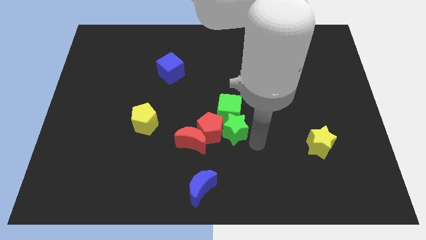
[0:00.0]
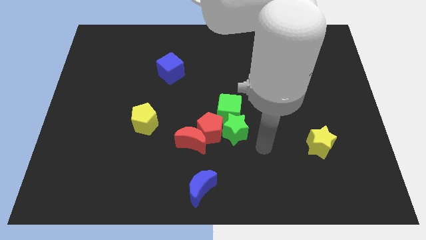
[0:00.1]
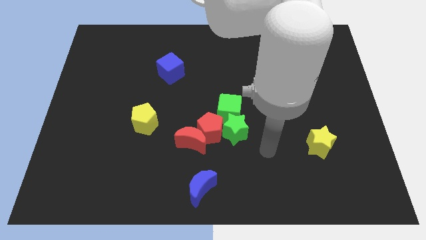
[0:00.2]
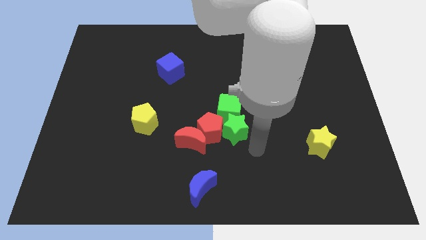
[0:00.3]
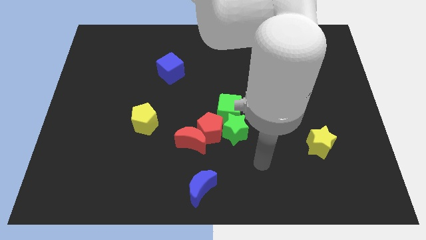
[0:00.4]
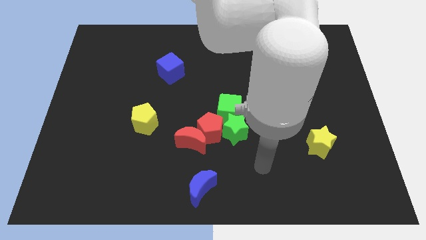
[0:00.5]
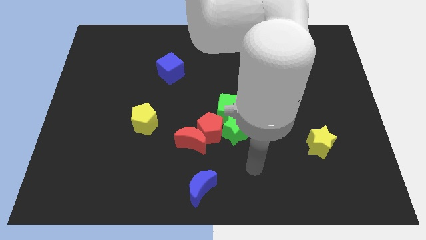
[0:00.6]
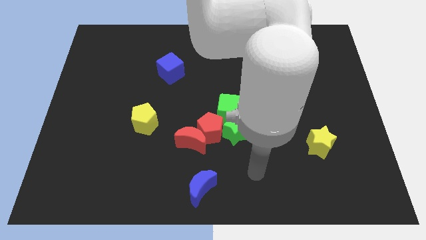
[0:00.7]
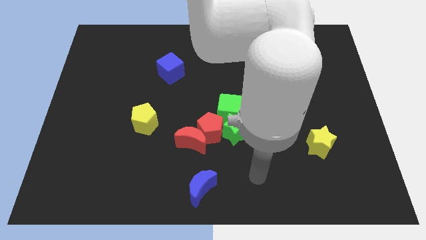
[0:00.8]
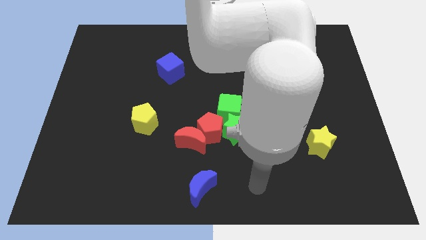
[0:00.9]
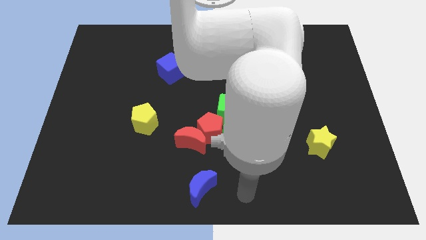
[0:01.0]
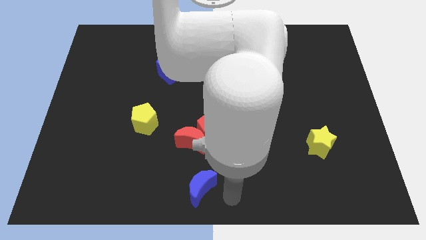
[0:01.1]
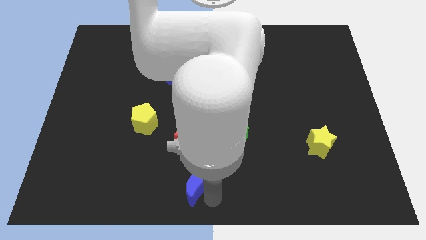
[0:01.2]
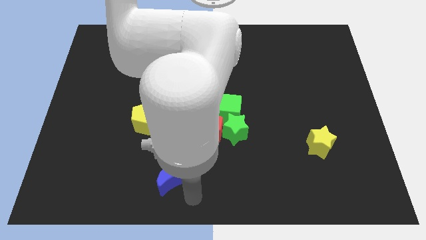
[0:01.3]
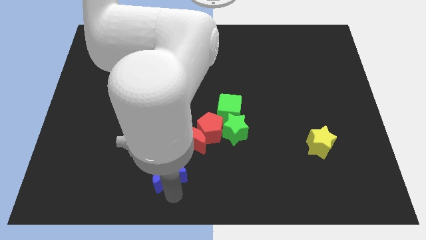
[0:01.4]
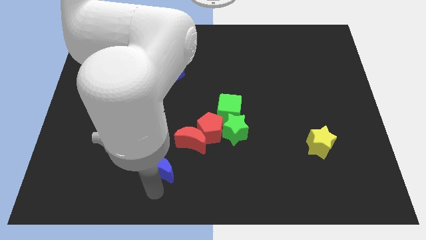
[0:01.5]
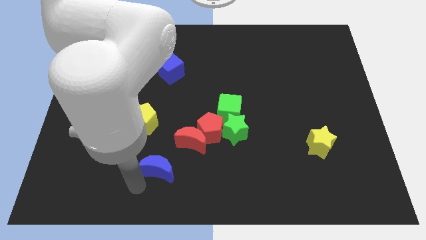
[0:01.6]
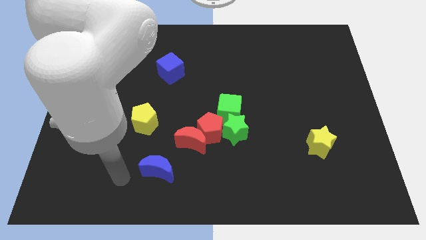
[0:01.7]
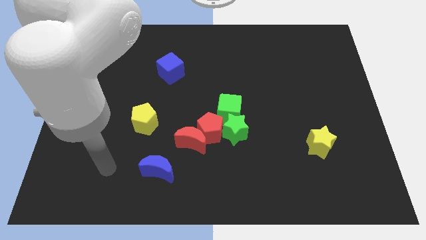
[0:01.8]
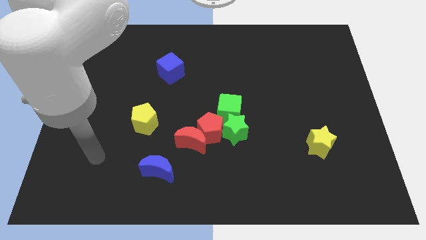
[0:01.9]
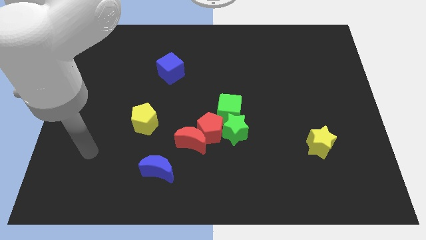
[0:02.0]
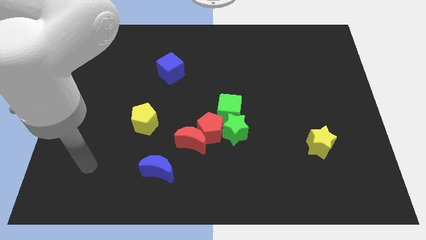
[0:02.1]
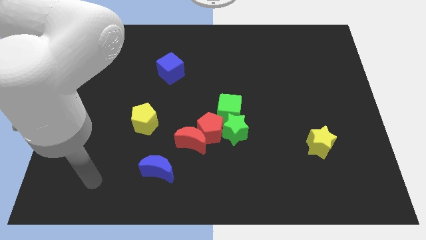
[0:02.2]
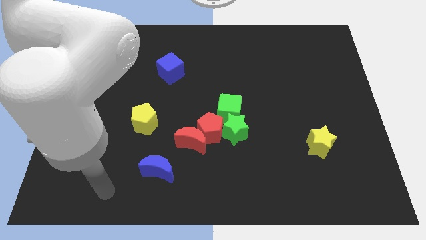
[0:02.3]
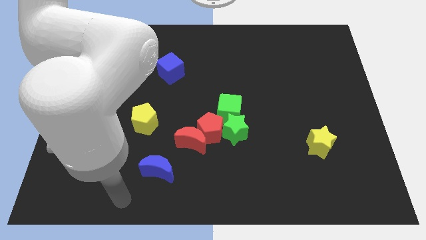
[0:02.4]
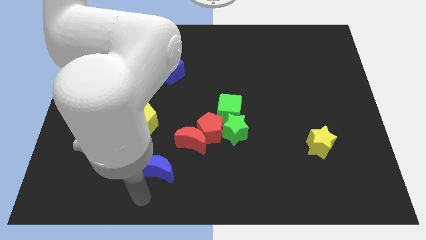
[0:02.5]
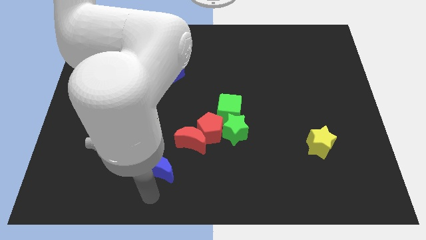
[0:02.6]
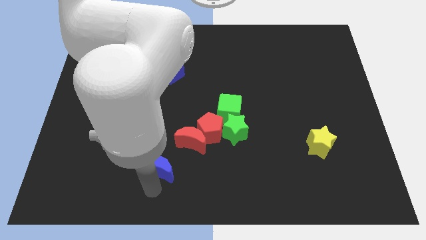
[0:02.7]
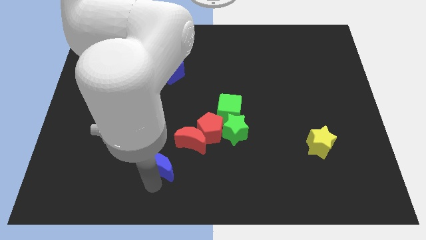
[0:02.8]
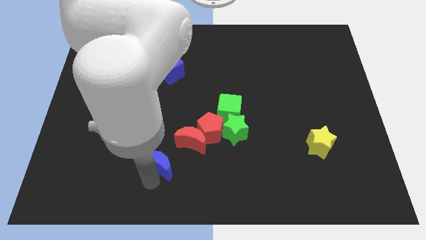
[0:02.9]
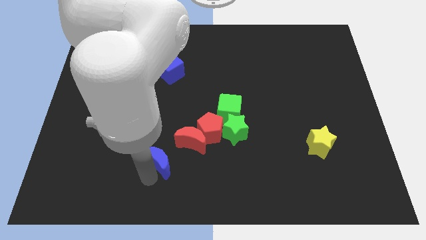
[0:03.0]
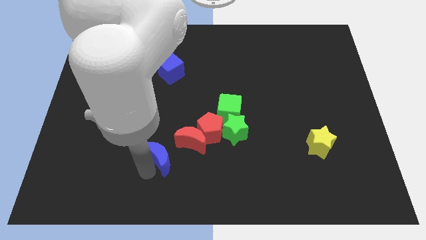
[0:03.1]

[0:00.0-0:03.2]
place the blue moon diagonally bottom left to the red moon

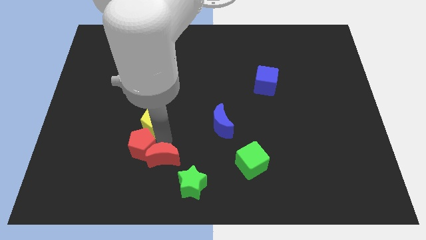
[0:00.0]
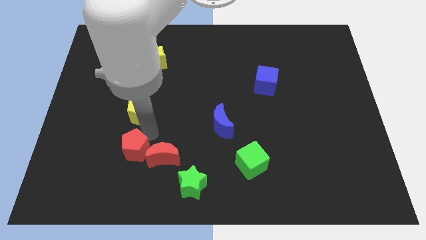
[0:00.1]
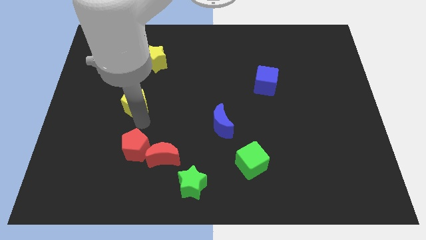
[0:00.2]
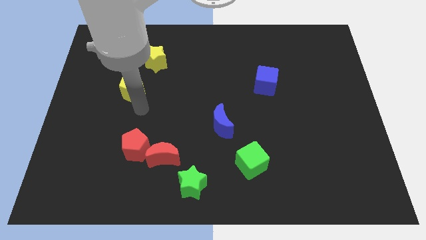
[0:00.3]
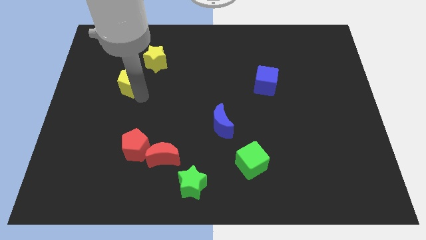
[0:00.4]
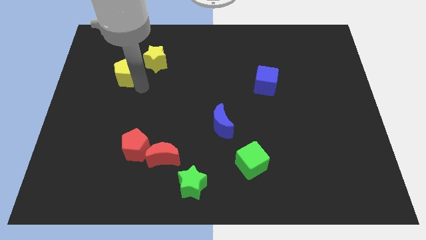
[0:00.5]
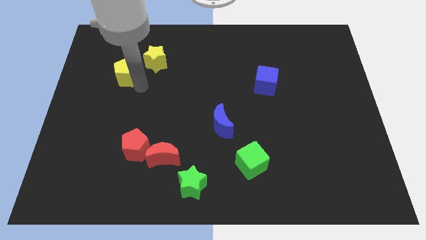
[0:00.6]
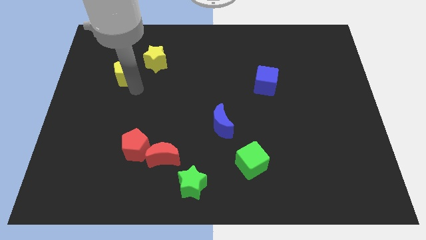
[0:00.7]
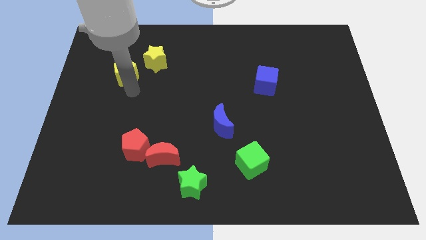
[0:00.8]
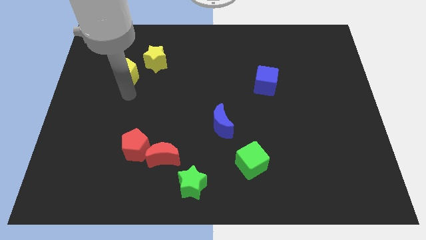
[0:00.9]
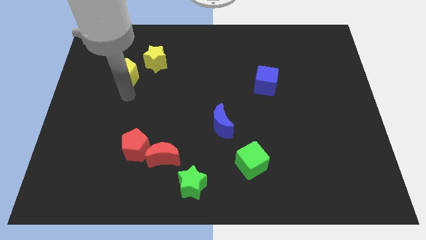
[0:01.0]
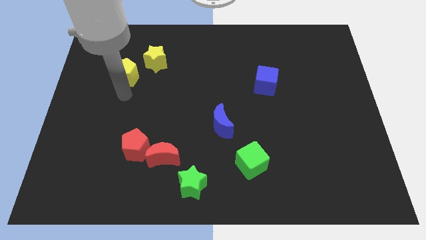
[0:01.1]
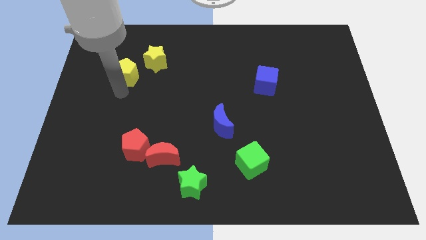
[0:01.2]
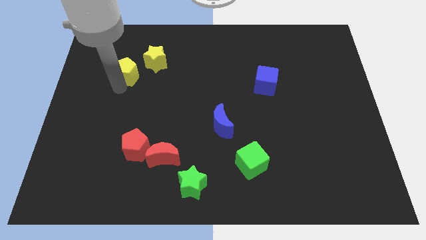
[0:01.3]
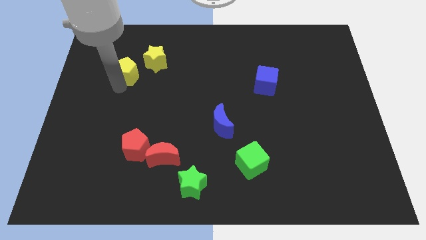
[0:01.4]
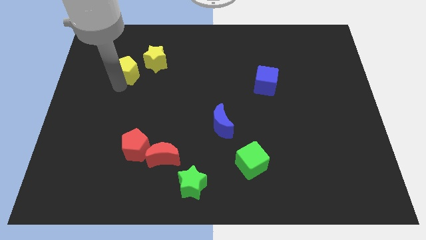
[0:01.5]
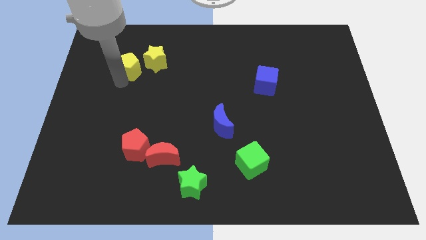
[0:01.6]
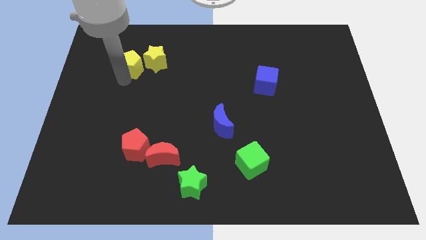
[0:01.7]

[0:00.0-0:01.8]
push the yellow pentagon beside the bottom left to the yellow star

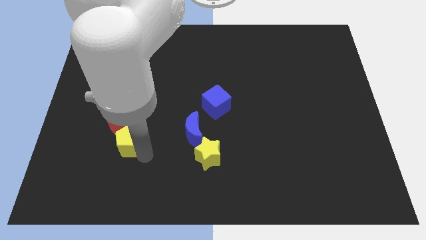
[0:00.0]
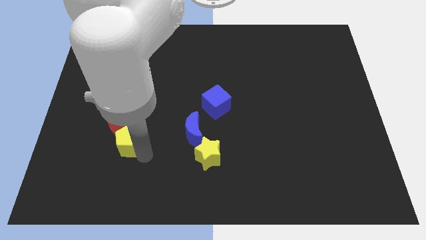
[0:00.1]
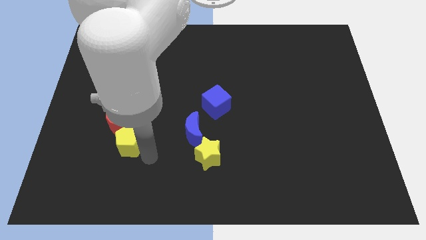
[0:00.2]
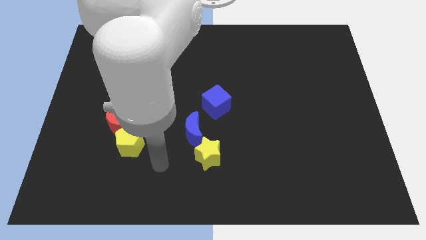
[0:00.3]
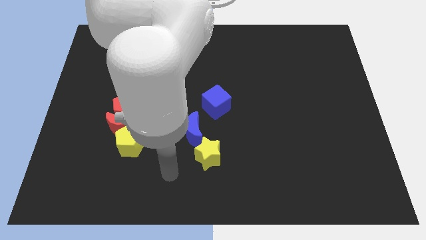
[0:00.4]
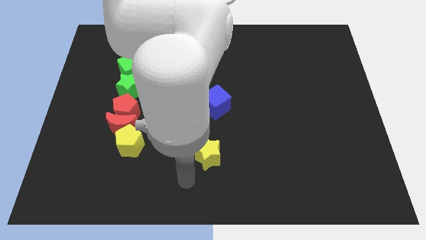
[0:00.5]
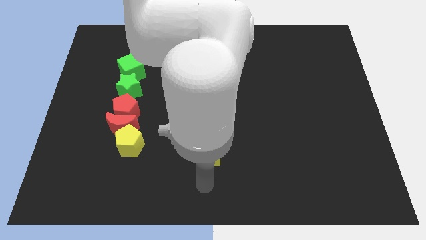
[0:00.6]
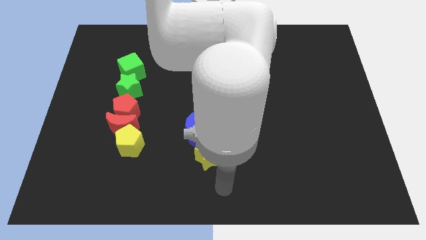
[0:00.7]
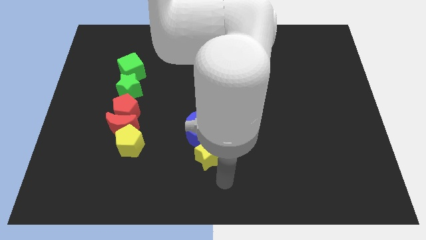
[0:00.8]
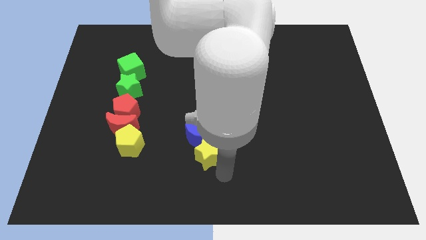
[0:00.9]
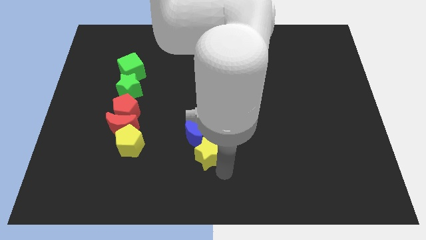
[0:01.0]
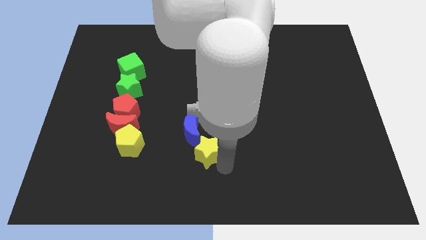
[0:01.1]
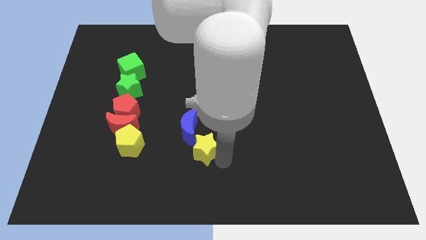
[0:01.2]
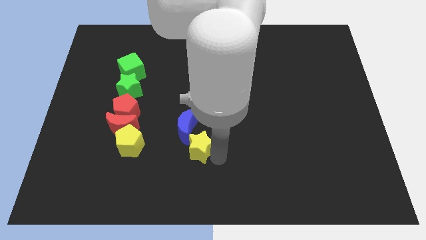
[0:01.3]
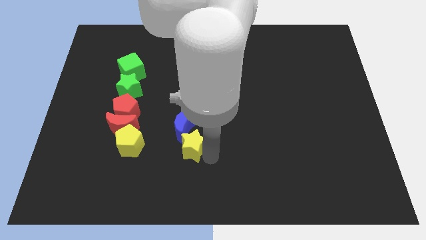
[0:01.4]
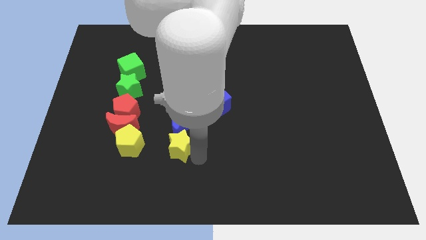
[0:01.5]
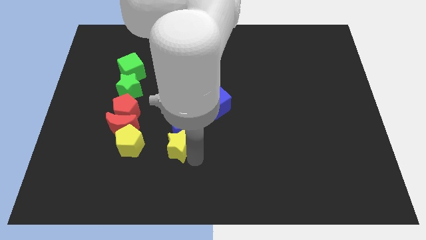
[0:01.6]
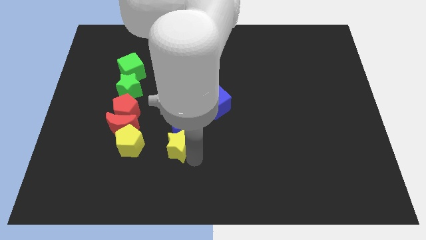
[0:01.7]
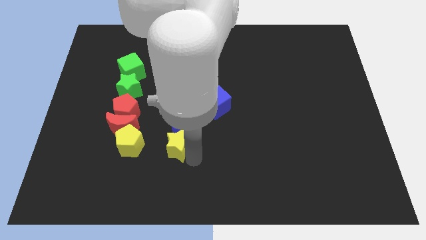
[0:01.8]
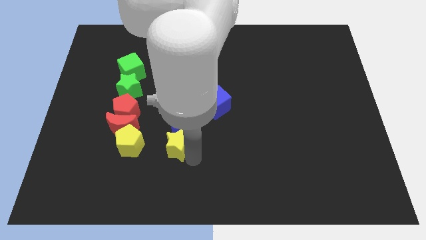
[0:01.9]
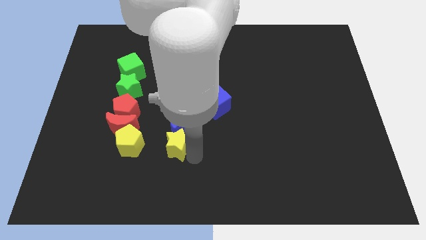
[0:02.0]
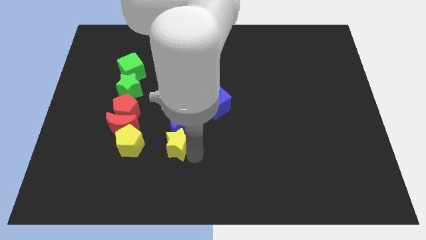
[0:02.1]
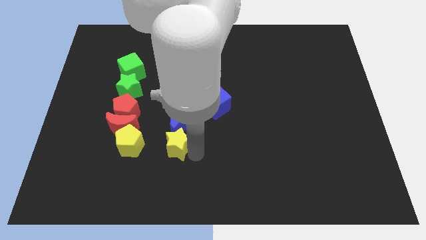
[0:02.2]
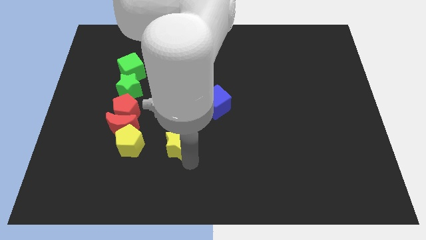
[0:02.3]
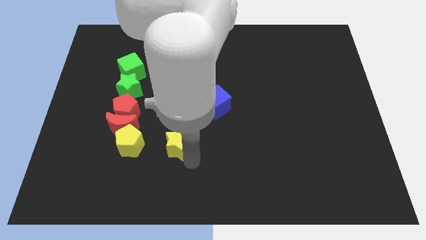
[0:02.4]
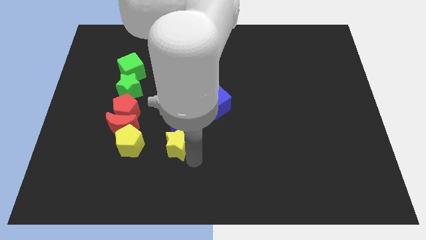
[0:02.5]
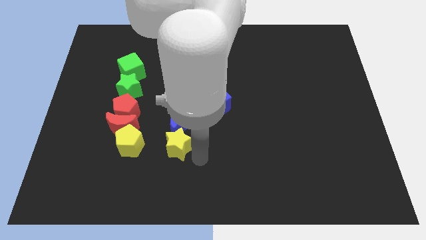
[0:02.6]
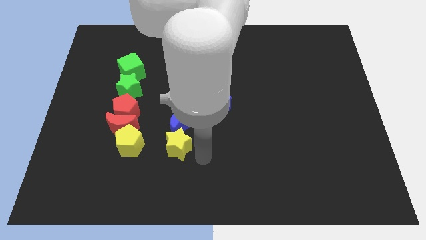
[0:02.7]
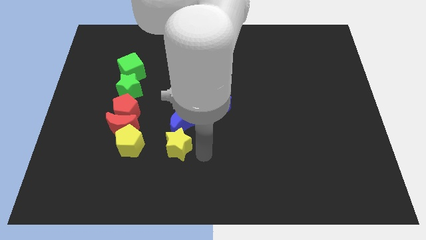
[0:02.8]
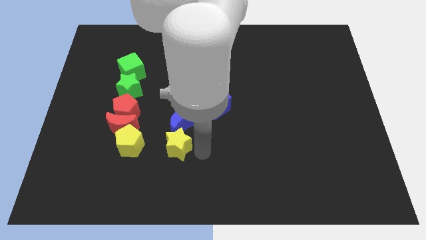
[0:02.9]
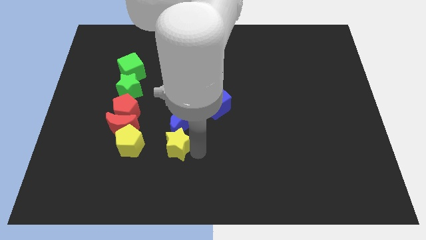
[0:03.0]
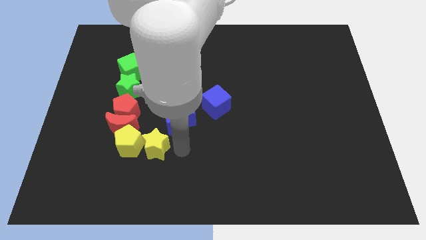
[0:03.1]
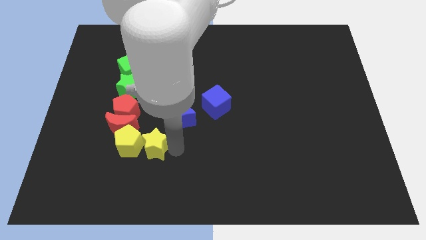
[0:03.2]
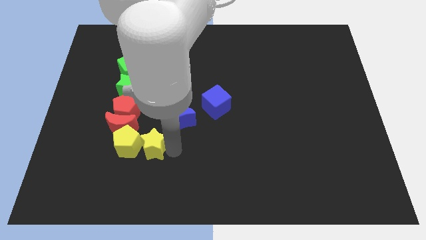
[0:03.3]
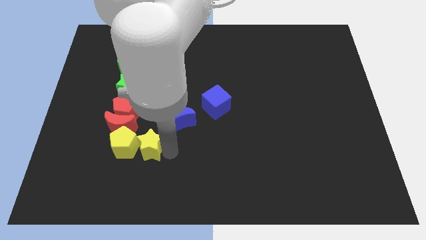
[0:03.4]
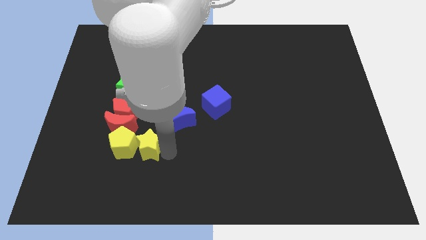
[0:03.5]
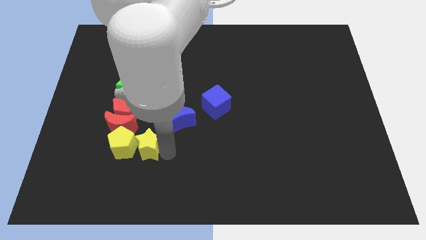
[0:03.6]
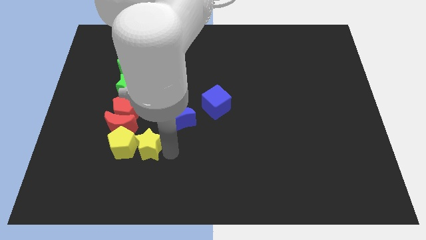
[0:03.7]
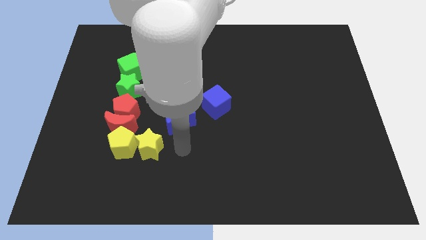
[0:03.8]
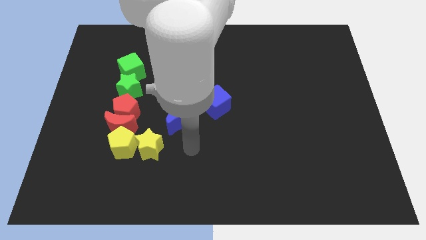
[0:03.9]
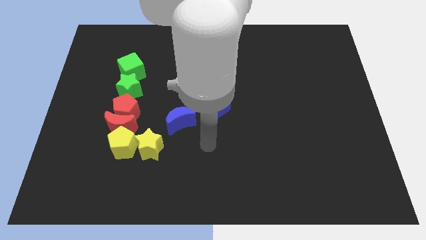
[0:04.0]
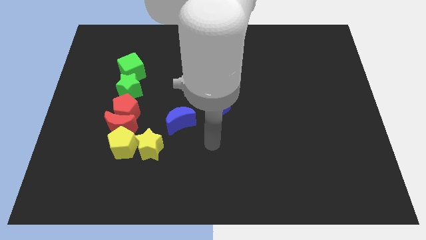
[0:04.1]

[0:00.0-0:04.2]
move yellow star into yellow pentagon
